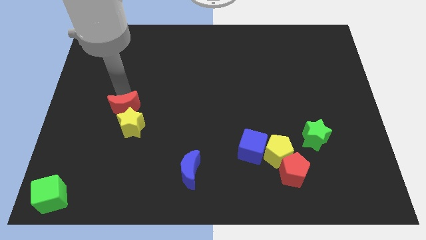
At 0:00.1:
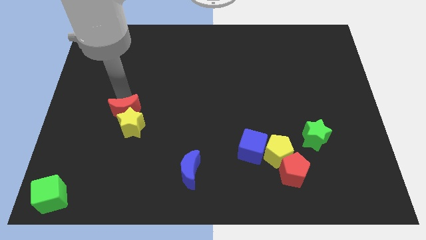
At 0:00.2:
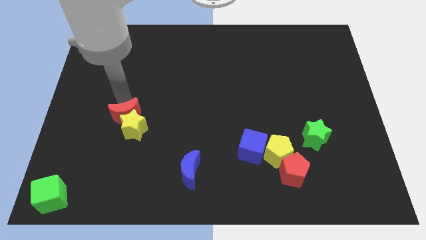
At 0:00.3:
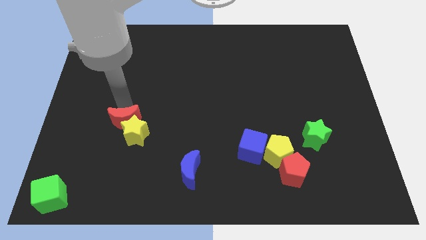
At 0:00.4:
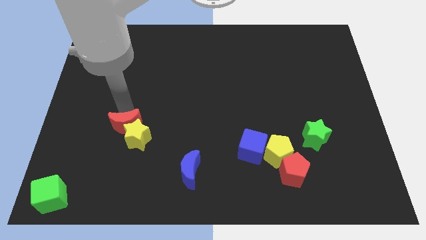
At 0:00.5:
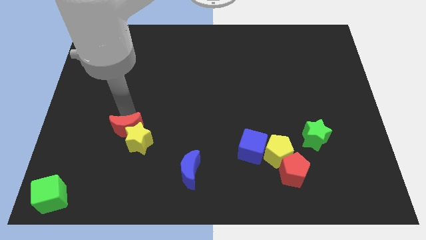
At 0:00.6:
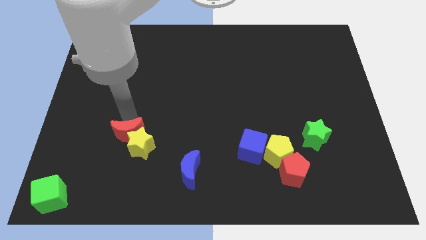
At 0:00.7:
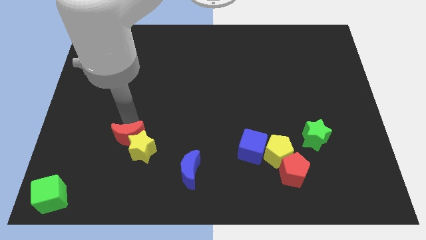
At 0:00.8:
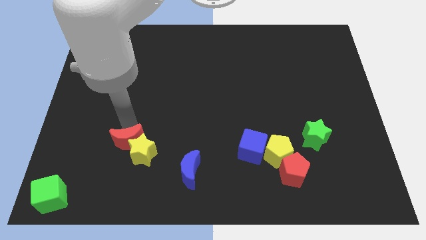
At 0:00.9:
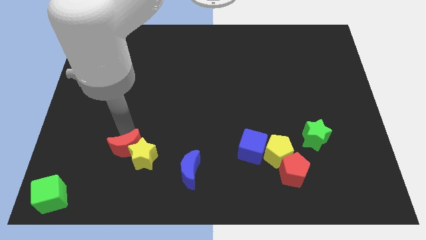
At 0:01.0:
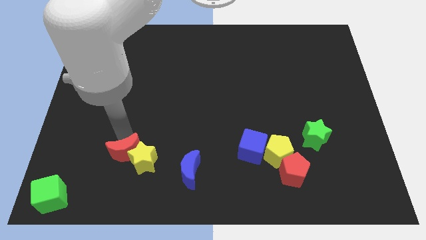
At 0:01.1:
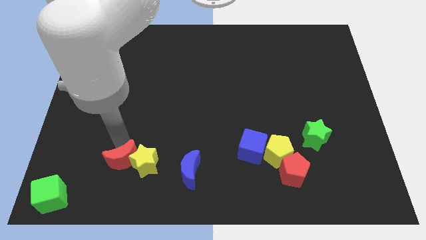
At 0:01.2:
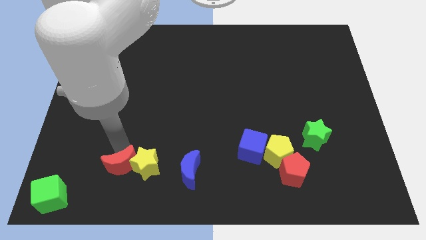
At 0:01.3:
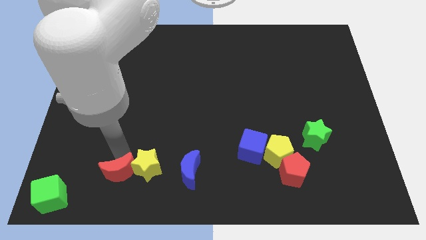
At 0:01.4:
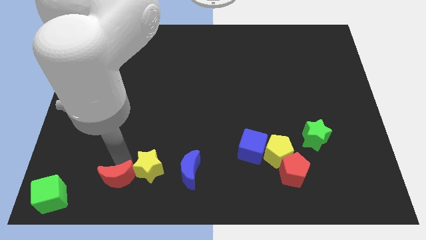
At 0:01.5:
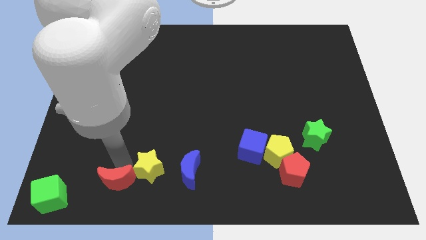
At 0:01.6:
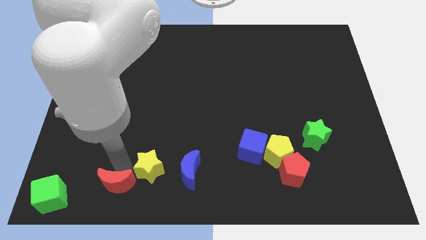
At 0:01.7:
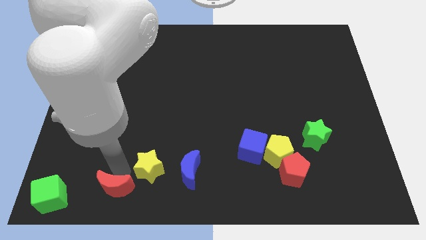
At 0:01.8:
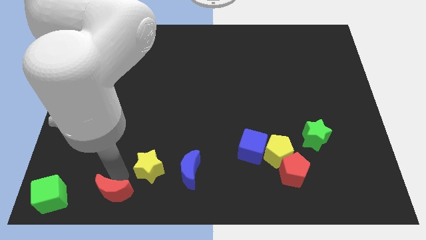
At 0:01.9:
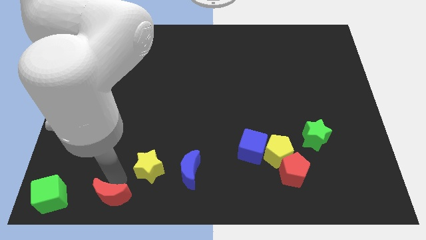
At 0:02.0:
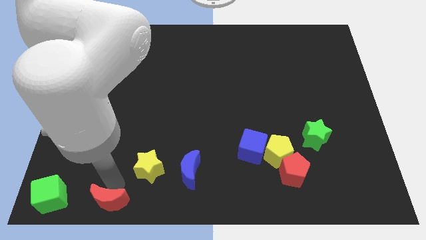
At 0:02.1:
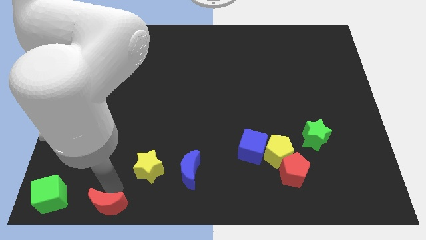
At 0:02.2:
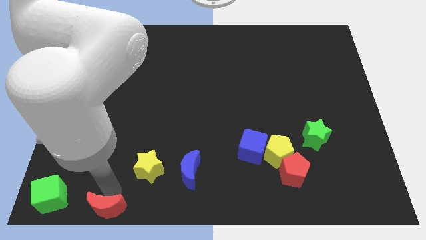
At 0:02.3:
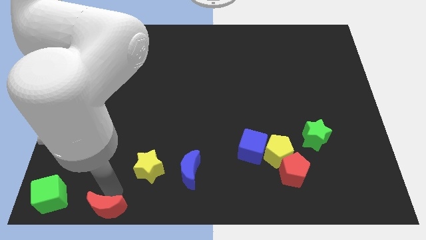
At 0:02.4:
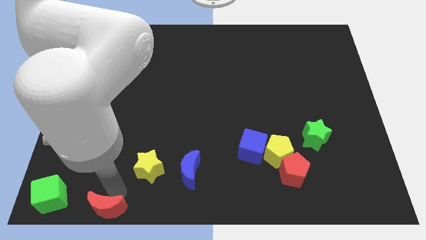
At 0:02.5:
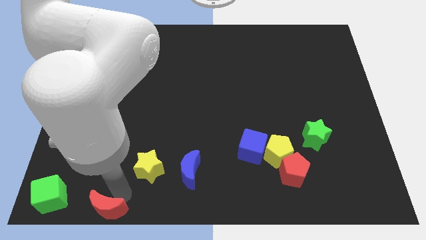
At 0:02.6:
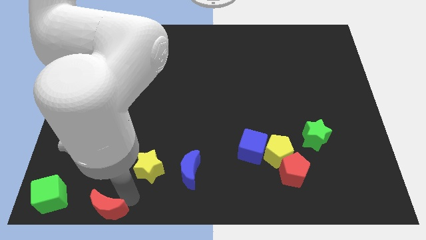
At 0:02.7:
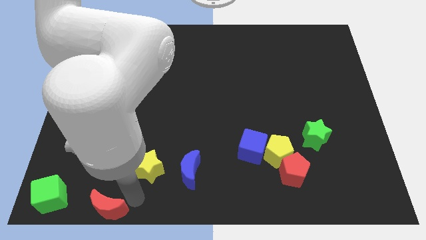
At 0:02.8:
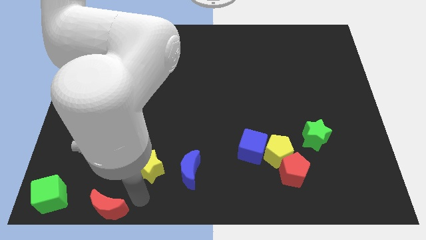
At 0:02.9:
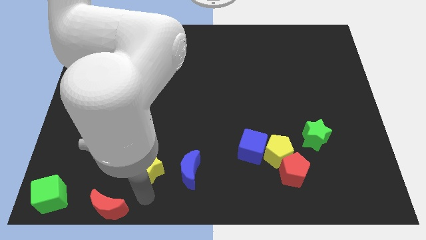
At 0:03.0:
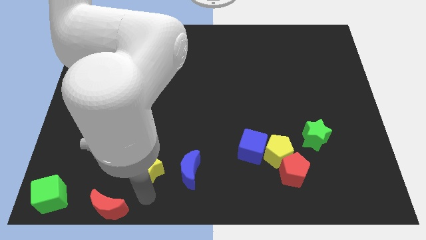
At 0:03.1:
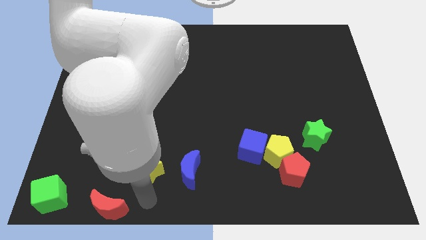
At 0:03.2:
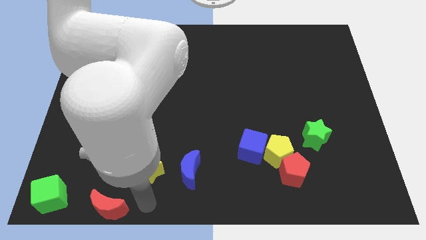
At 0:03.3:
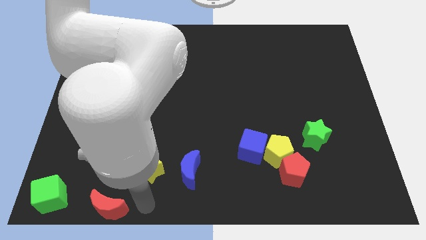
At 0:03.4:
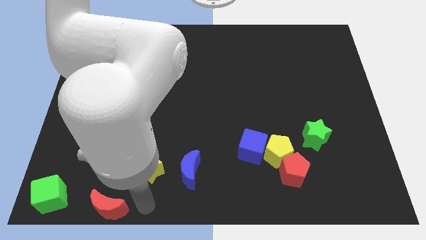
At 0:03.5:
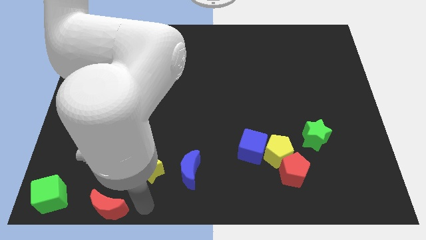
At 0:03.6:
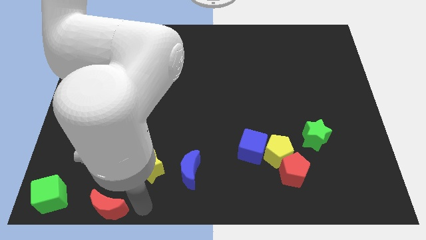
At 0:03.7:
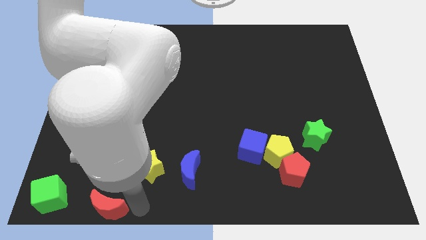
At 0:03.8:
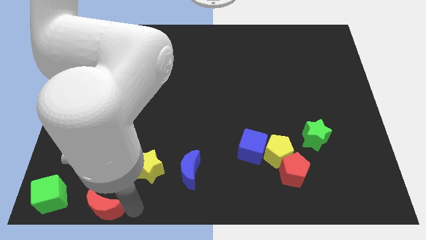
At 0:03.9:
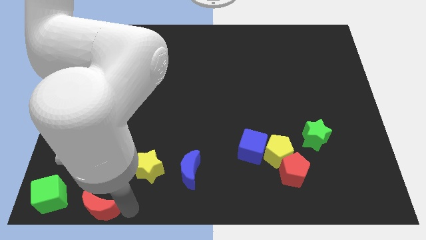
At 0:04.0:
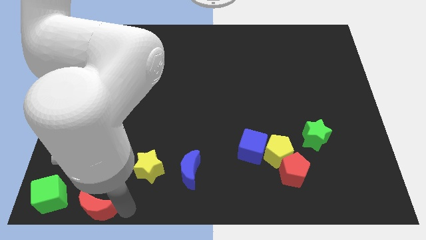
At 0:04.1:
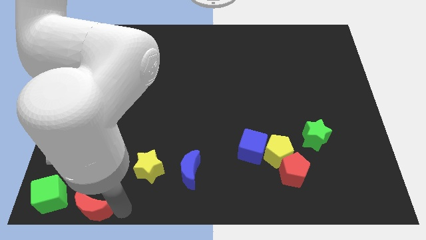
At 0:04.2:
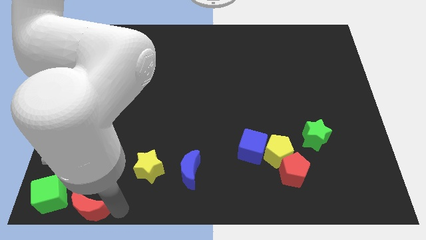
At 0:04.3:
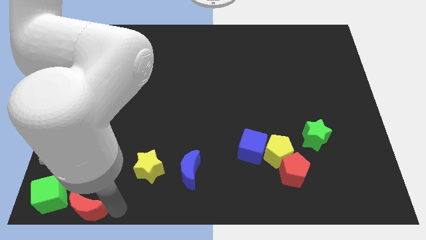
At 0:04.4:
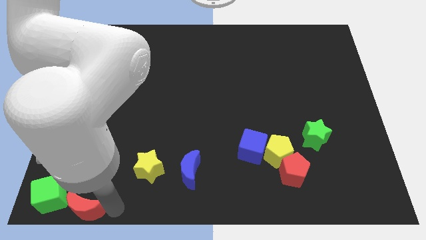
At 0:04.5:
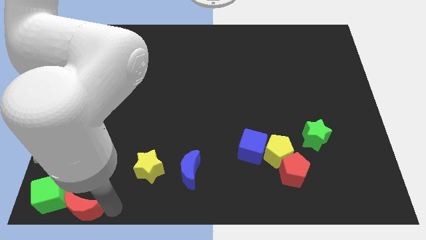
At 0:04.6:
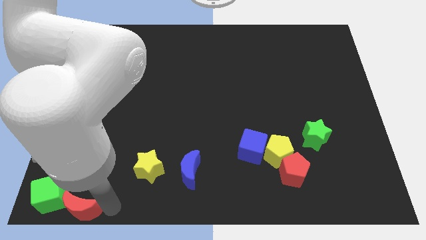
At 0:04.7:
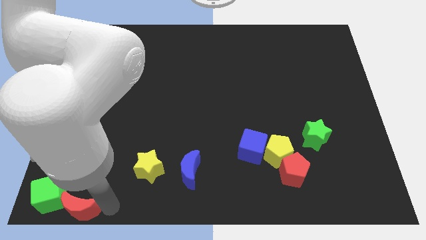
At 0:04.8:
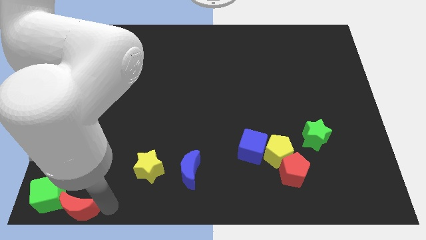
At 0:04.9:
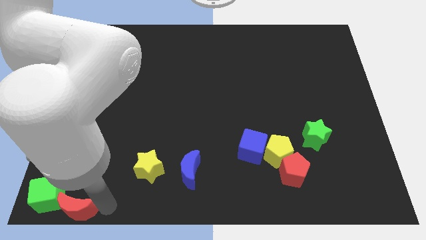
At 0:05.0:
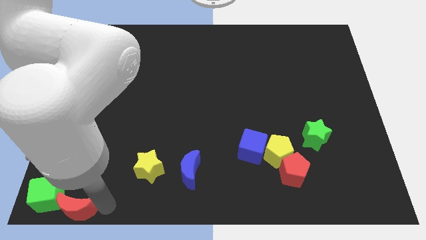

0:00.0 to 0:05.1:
place the red crescent at the bottom of the left side

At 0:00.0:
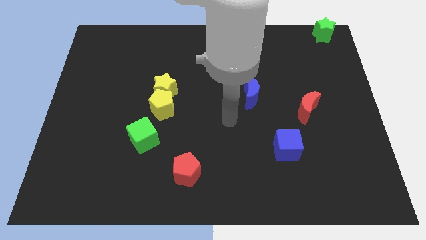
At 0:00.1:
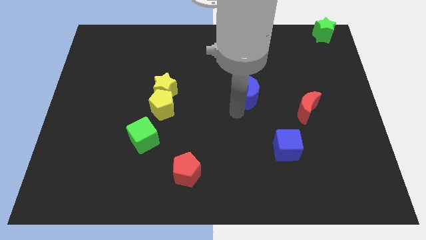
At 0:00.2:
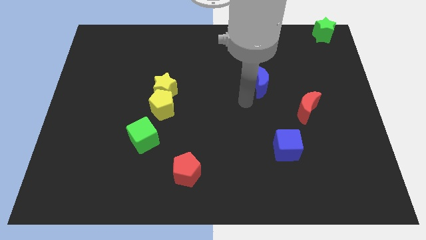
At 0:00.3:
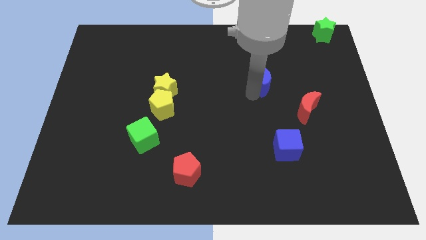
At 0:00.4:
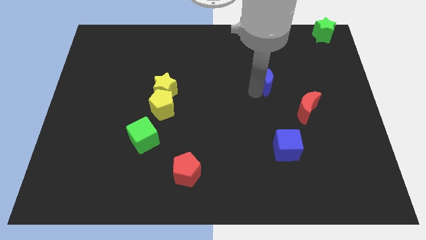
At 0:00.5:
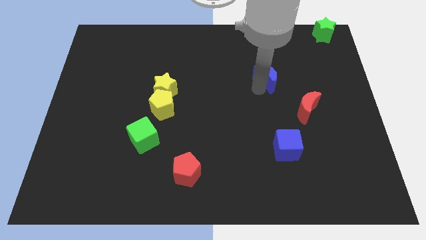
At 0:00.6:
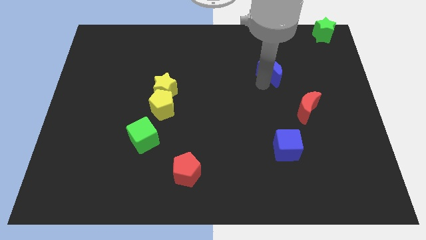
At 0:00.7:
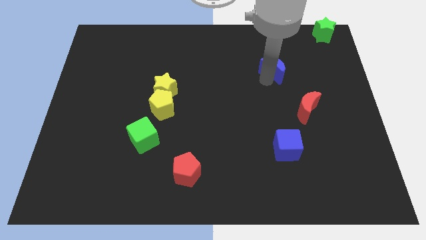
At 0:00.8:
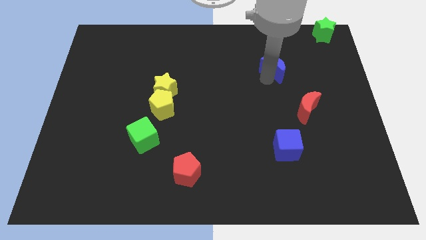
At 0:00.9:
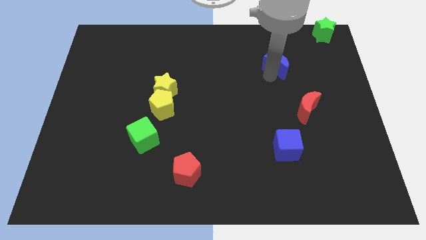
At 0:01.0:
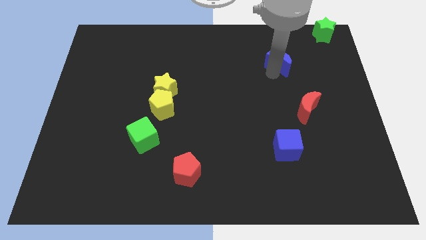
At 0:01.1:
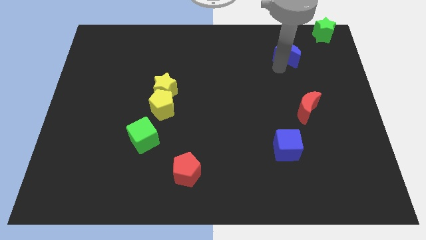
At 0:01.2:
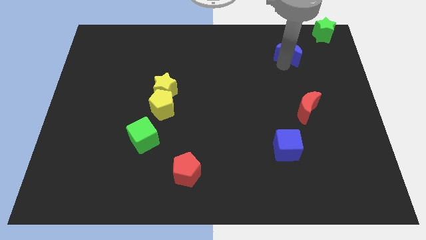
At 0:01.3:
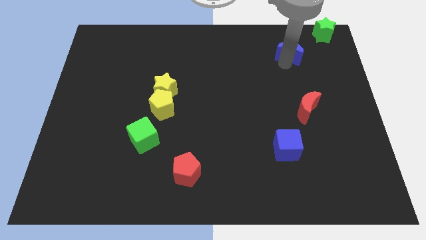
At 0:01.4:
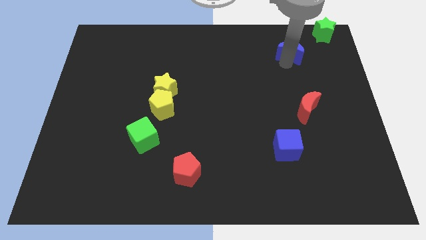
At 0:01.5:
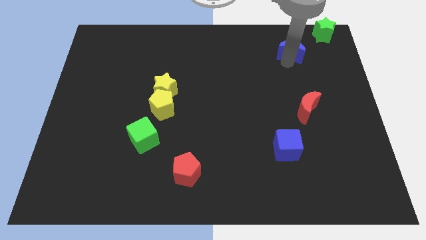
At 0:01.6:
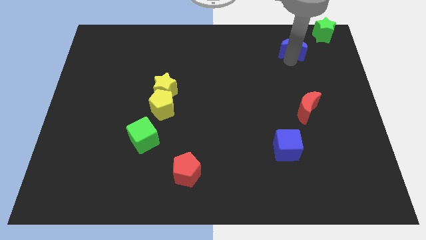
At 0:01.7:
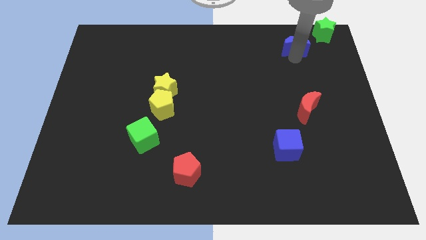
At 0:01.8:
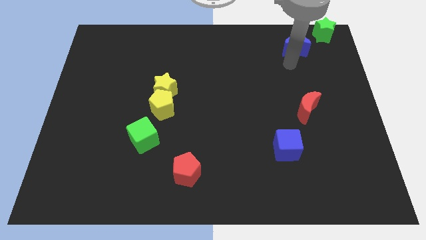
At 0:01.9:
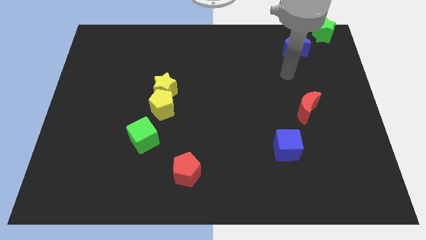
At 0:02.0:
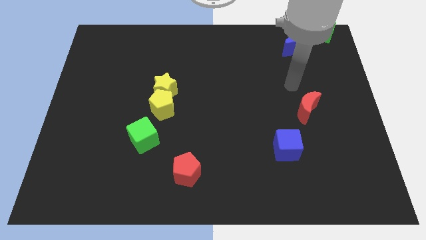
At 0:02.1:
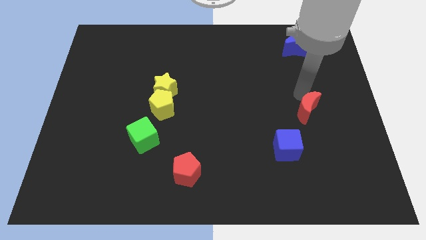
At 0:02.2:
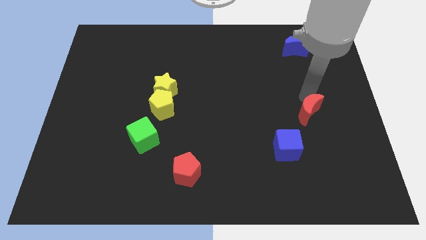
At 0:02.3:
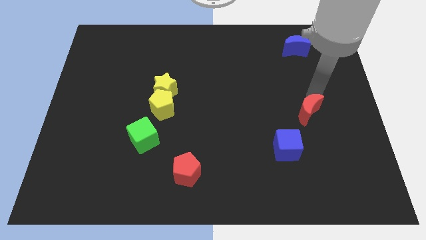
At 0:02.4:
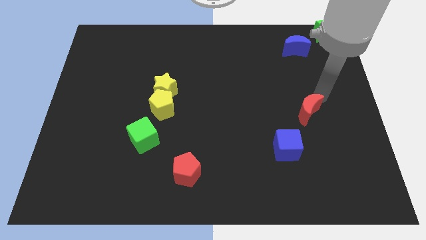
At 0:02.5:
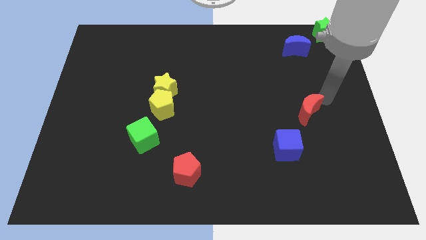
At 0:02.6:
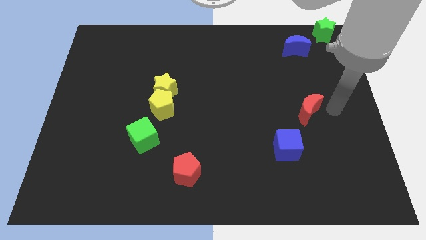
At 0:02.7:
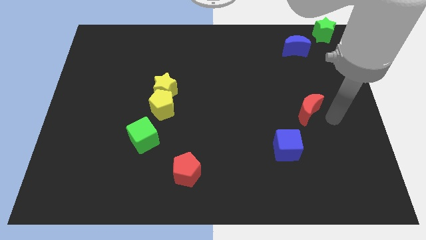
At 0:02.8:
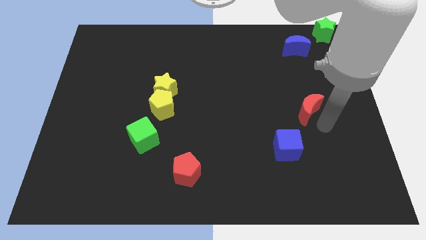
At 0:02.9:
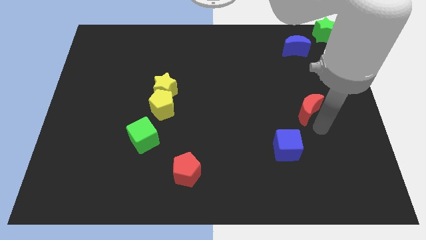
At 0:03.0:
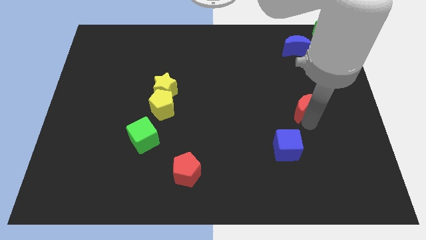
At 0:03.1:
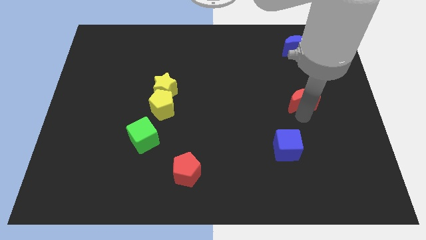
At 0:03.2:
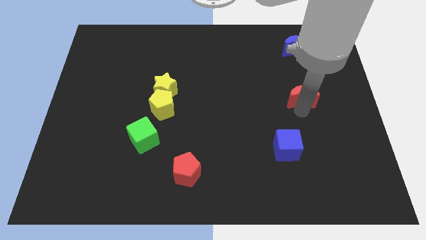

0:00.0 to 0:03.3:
move the blue moon towards the green star

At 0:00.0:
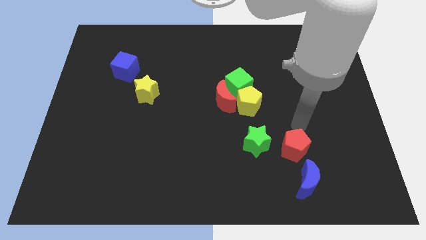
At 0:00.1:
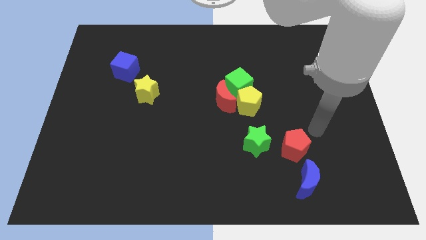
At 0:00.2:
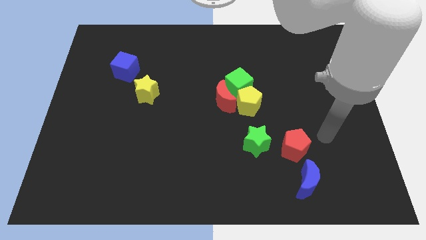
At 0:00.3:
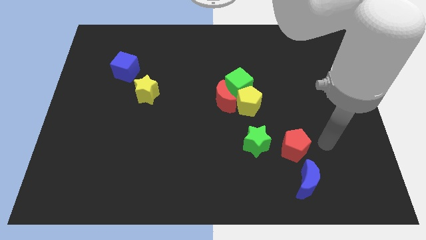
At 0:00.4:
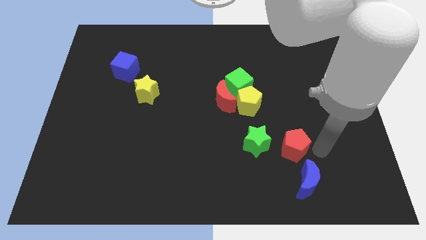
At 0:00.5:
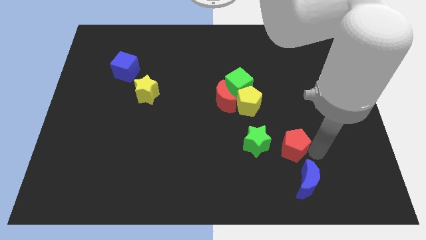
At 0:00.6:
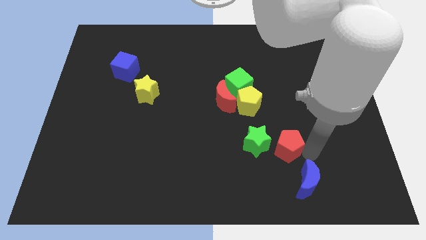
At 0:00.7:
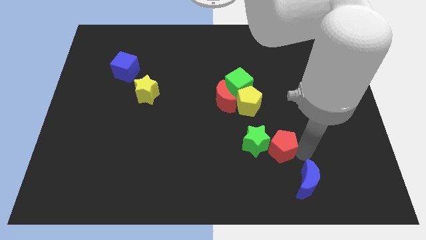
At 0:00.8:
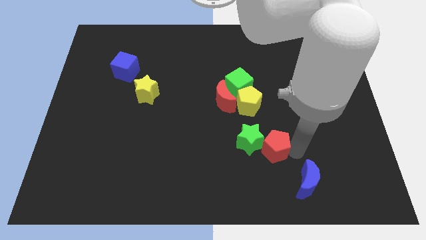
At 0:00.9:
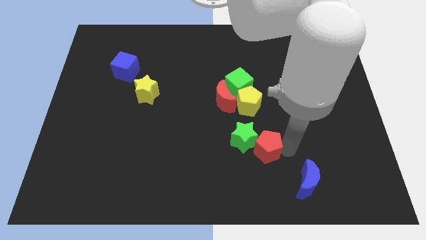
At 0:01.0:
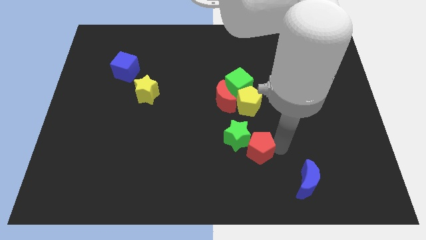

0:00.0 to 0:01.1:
push red pentagon into the green star
